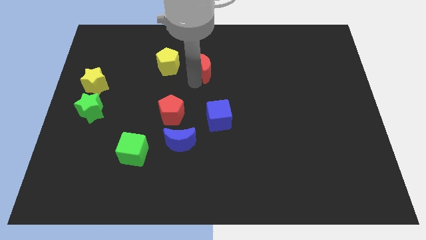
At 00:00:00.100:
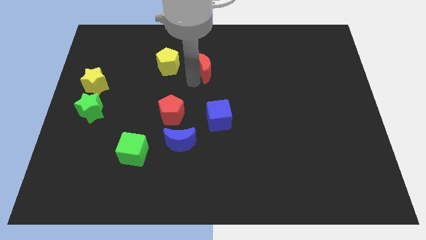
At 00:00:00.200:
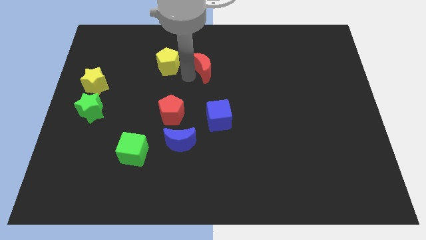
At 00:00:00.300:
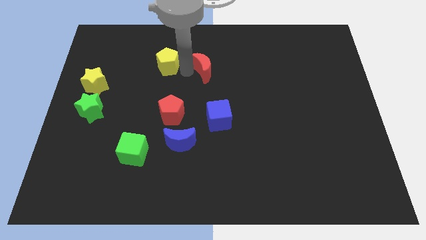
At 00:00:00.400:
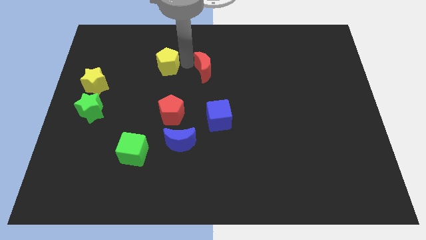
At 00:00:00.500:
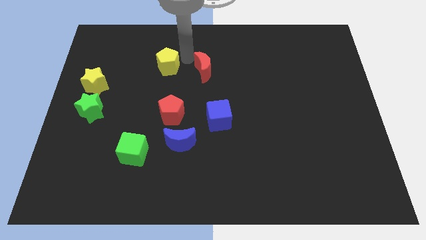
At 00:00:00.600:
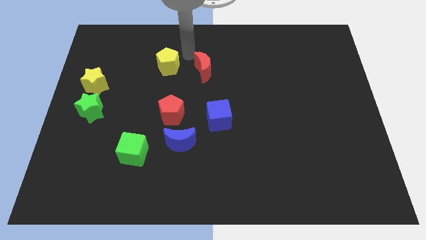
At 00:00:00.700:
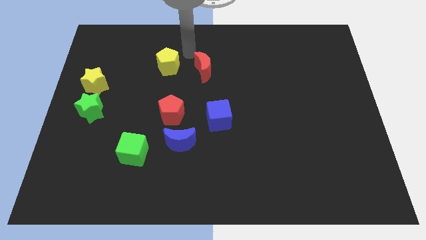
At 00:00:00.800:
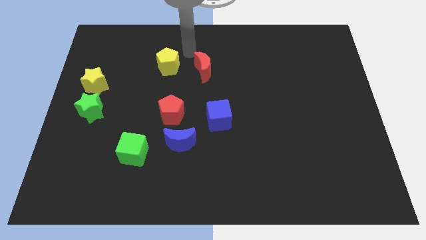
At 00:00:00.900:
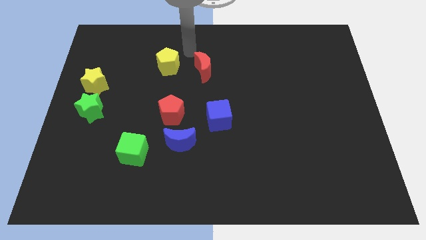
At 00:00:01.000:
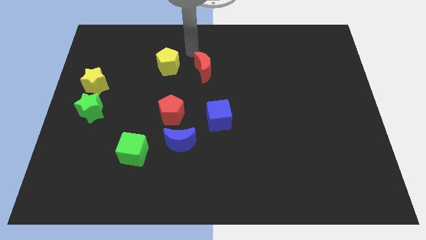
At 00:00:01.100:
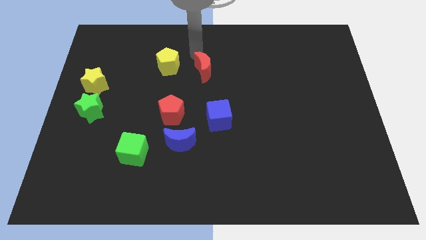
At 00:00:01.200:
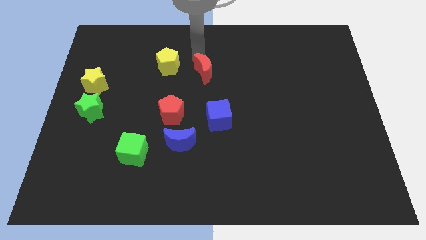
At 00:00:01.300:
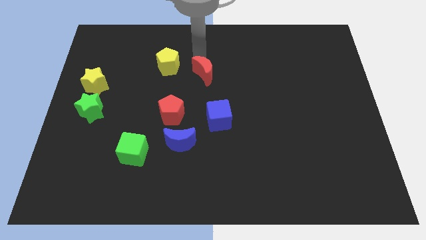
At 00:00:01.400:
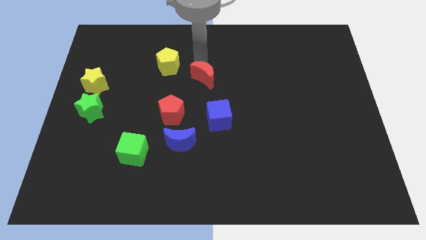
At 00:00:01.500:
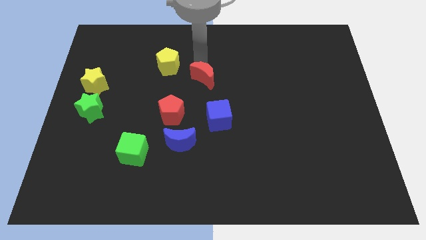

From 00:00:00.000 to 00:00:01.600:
place the red moon diagonal to the red pentagon

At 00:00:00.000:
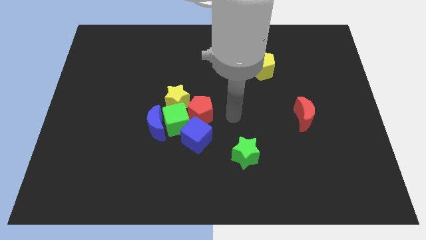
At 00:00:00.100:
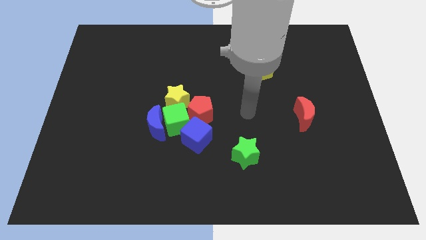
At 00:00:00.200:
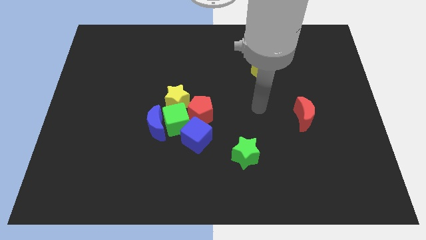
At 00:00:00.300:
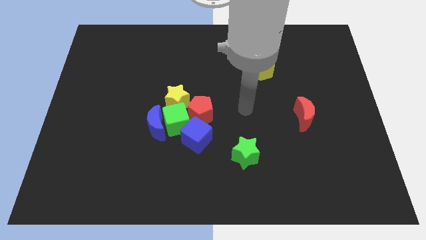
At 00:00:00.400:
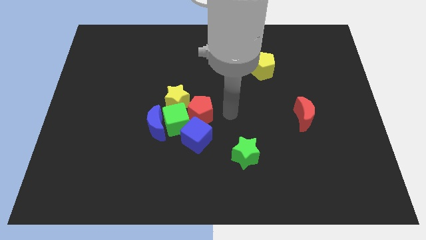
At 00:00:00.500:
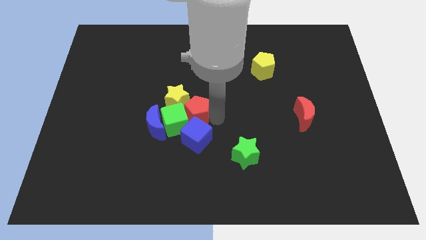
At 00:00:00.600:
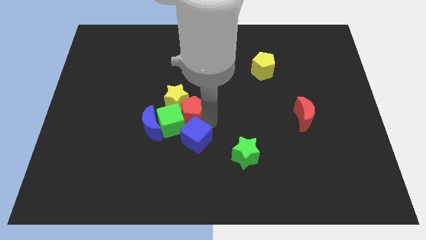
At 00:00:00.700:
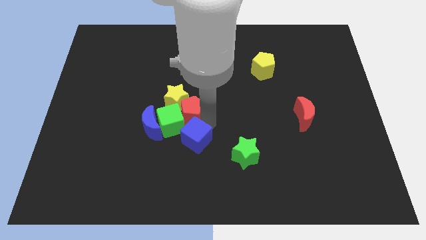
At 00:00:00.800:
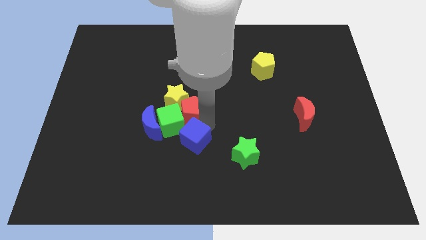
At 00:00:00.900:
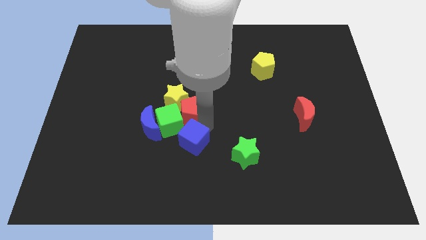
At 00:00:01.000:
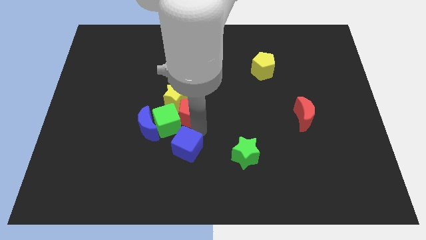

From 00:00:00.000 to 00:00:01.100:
place your arm in between red pentagon and blue cube

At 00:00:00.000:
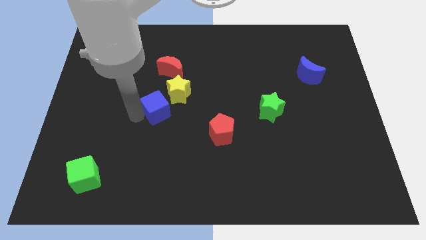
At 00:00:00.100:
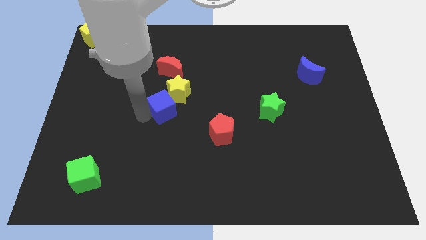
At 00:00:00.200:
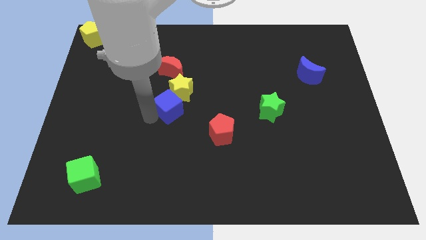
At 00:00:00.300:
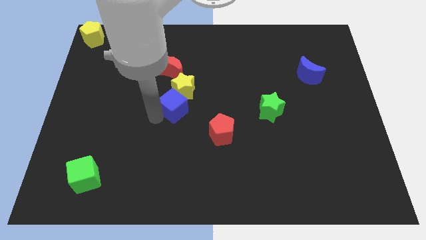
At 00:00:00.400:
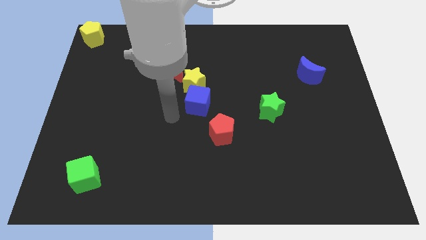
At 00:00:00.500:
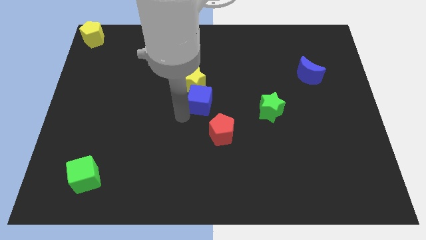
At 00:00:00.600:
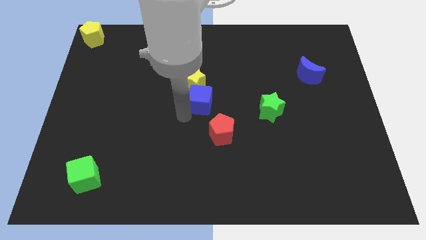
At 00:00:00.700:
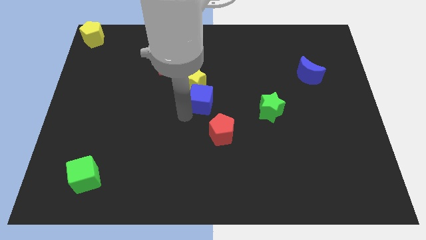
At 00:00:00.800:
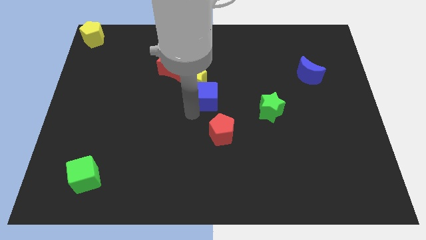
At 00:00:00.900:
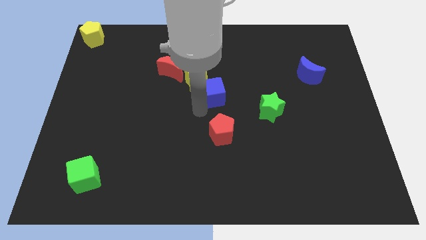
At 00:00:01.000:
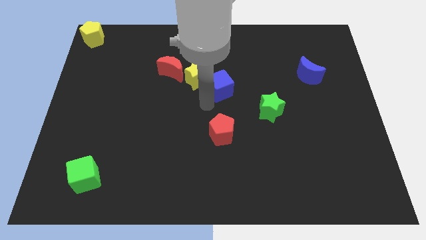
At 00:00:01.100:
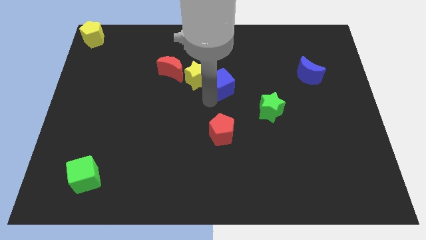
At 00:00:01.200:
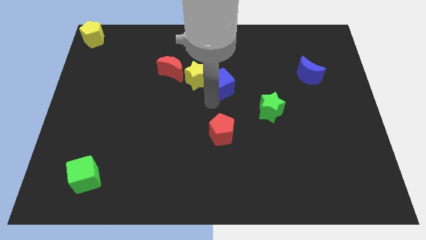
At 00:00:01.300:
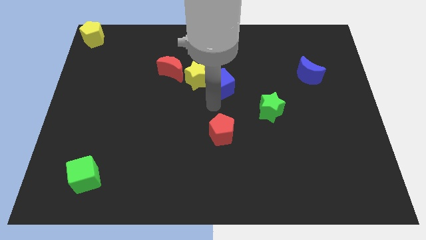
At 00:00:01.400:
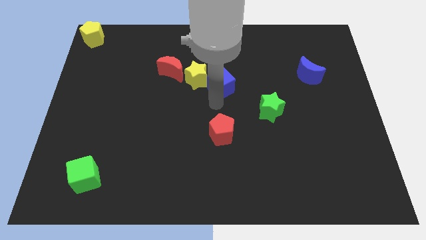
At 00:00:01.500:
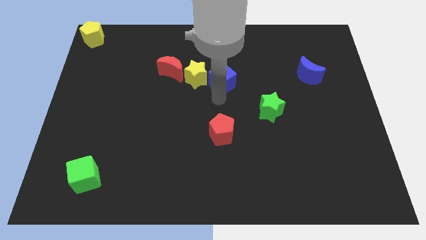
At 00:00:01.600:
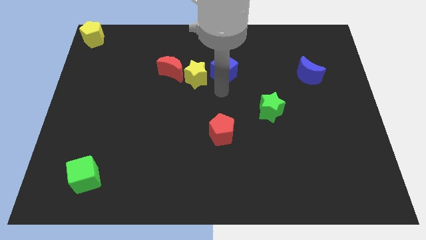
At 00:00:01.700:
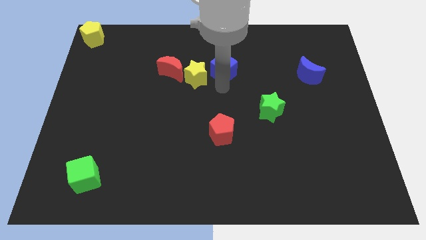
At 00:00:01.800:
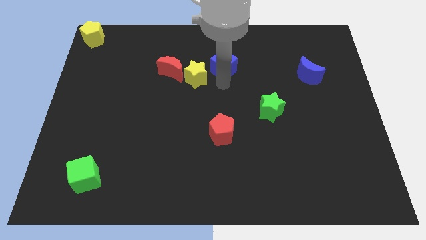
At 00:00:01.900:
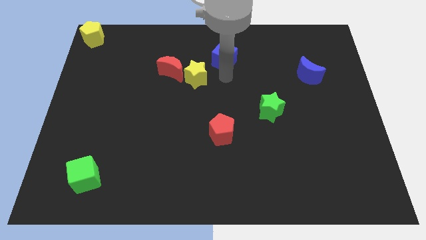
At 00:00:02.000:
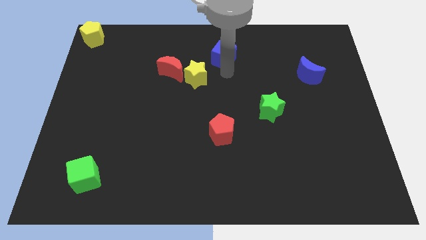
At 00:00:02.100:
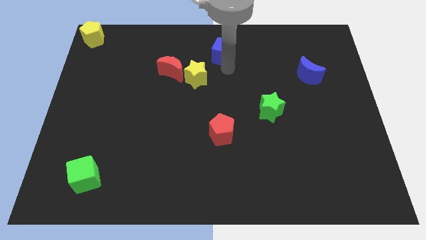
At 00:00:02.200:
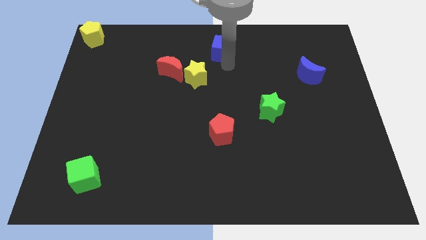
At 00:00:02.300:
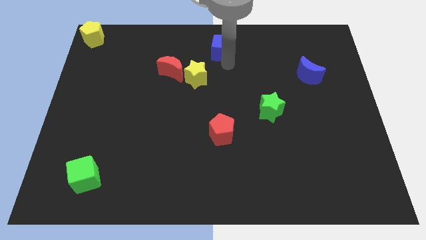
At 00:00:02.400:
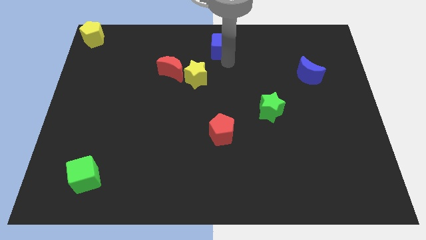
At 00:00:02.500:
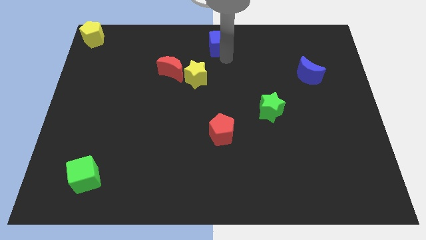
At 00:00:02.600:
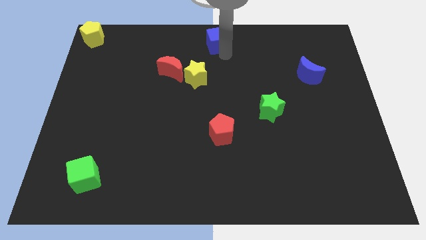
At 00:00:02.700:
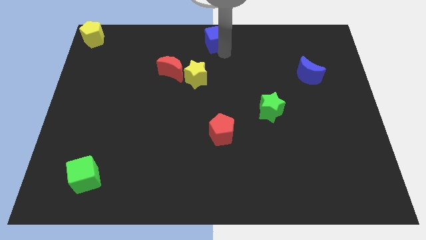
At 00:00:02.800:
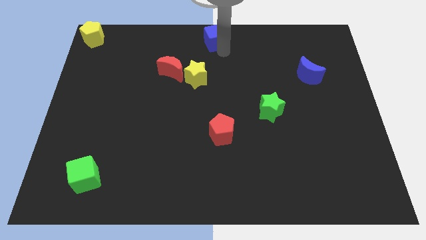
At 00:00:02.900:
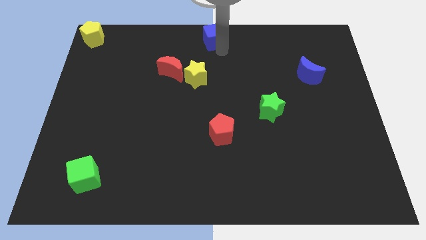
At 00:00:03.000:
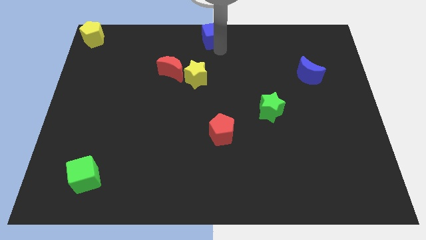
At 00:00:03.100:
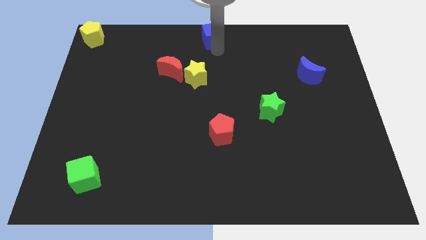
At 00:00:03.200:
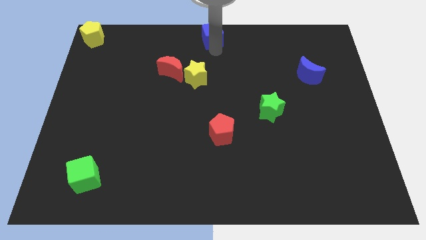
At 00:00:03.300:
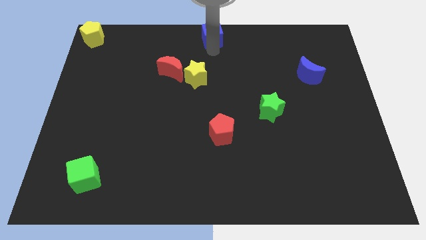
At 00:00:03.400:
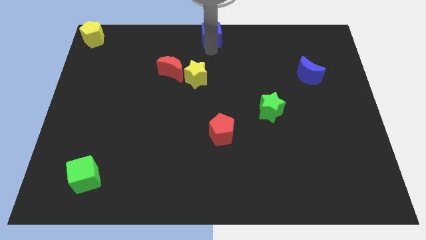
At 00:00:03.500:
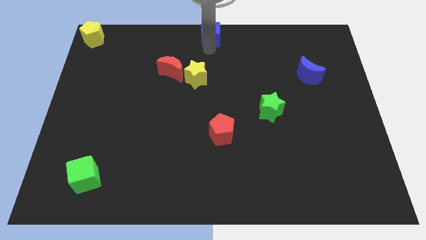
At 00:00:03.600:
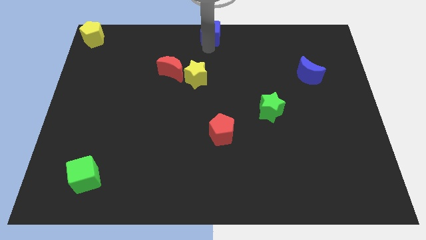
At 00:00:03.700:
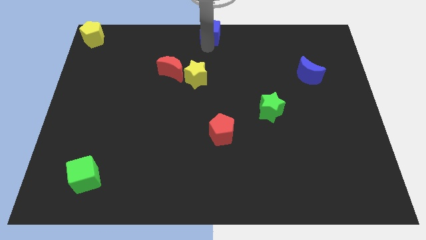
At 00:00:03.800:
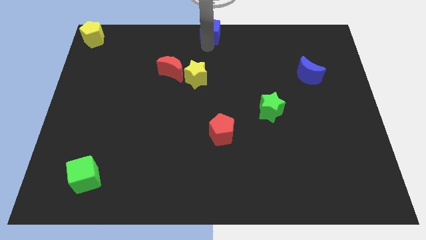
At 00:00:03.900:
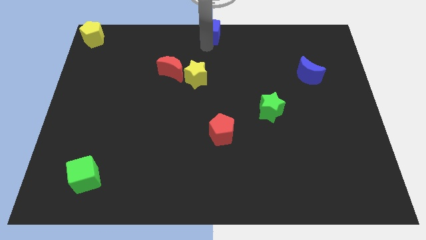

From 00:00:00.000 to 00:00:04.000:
move the blue cube to the top center of the board

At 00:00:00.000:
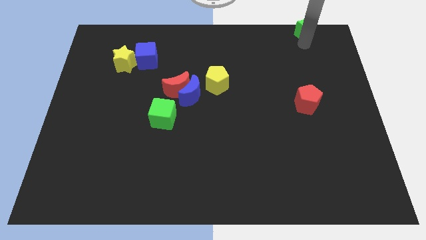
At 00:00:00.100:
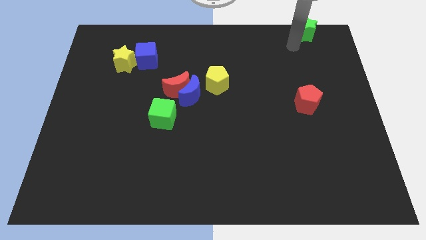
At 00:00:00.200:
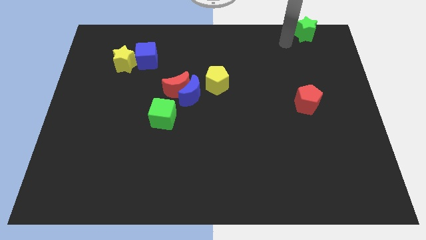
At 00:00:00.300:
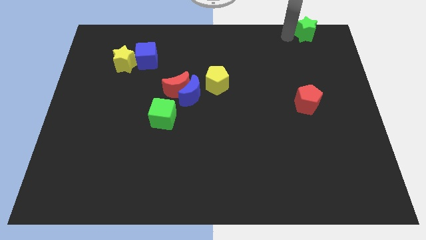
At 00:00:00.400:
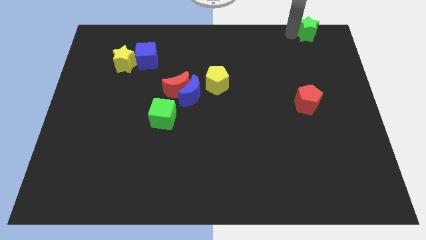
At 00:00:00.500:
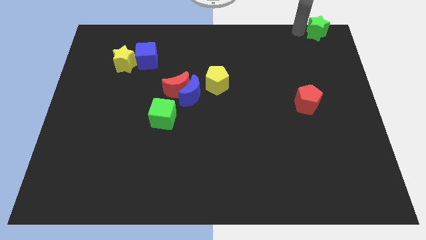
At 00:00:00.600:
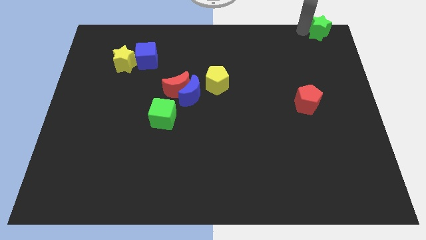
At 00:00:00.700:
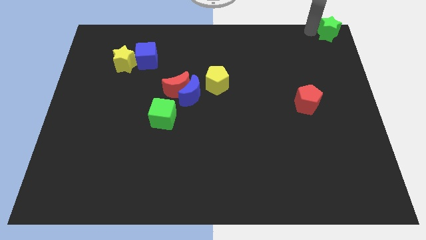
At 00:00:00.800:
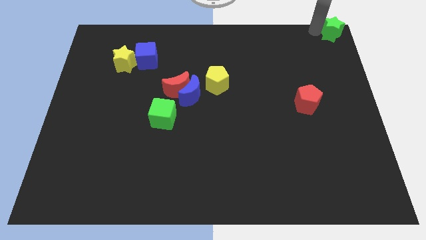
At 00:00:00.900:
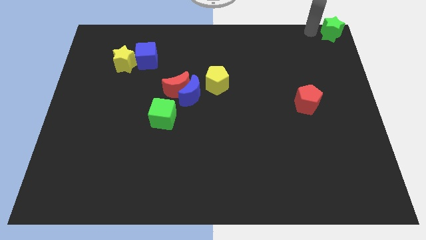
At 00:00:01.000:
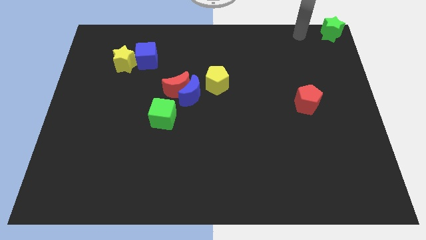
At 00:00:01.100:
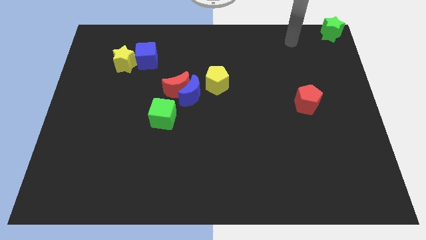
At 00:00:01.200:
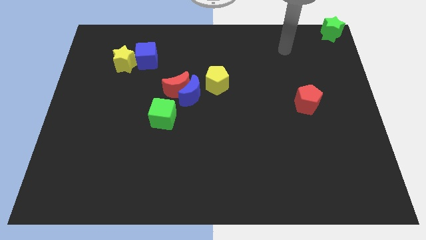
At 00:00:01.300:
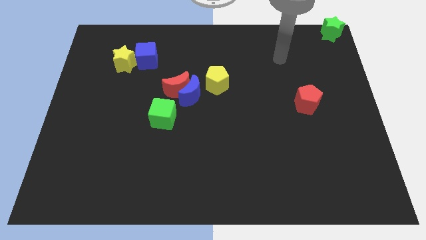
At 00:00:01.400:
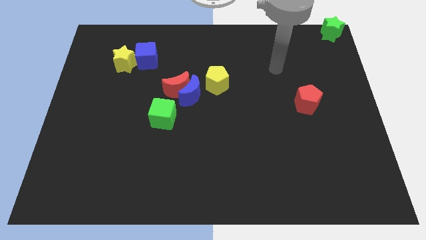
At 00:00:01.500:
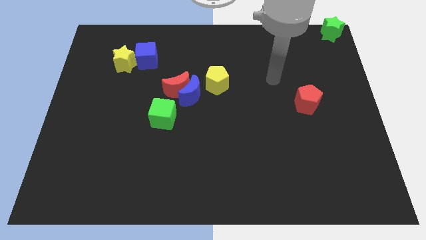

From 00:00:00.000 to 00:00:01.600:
push the green star to the top right corner of the board

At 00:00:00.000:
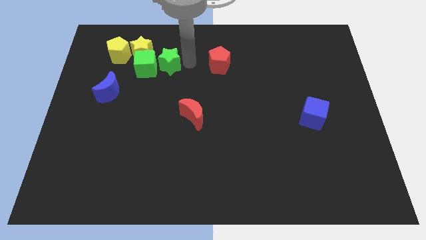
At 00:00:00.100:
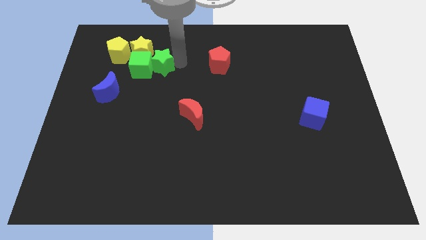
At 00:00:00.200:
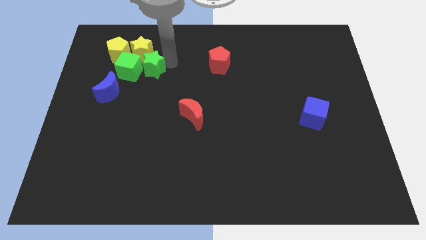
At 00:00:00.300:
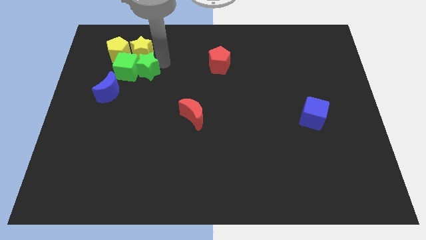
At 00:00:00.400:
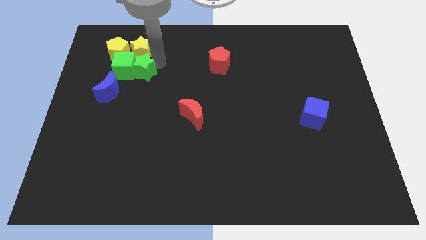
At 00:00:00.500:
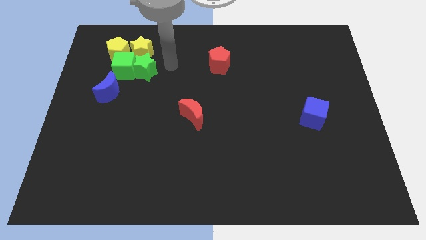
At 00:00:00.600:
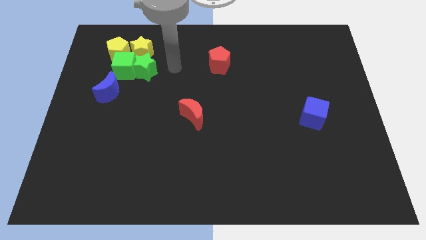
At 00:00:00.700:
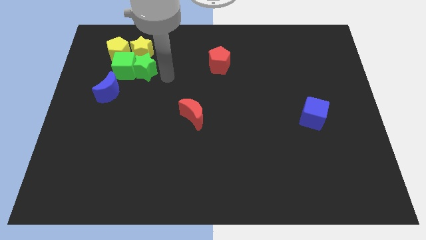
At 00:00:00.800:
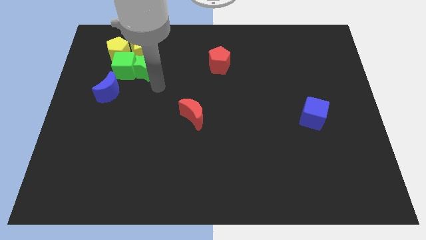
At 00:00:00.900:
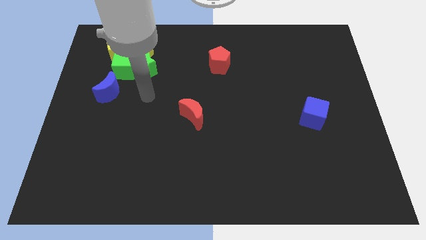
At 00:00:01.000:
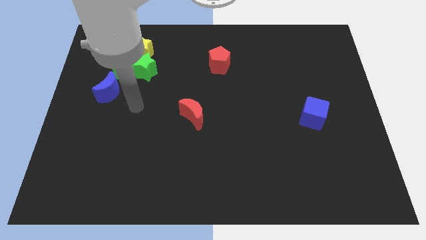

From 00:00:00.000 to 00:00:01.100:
drag the green star to the left
